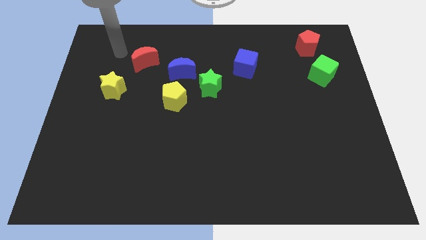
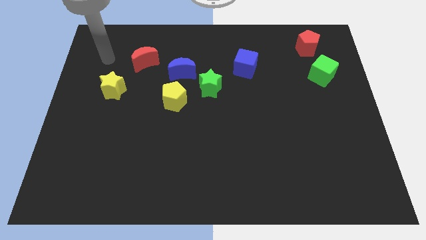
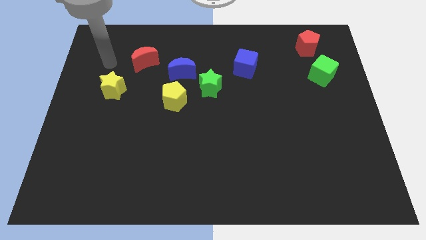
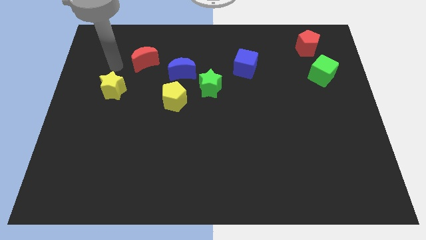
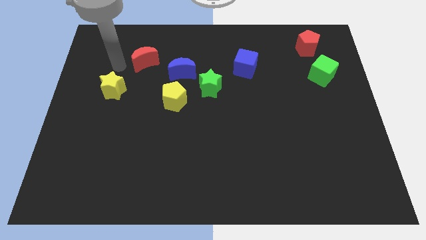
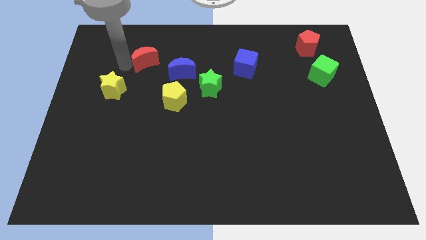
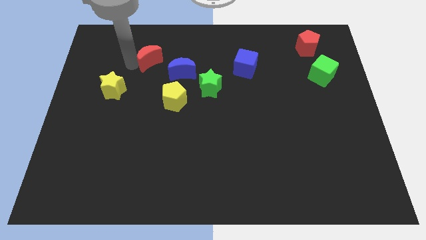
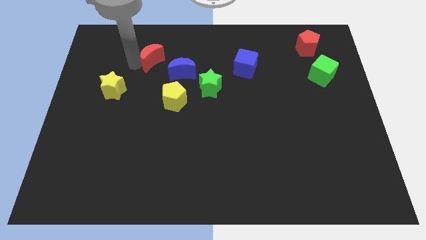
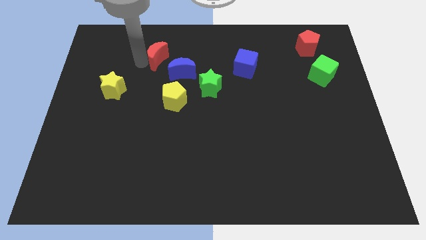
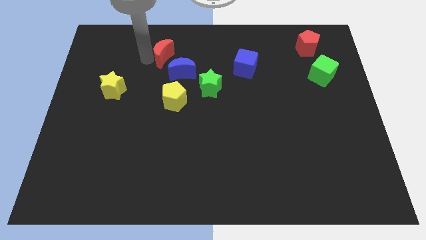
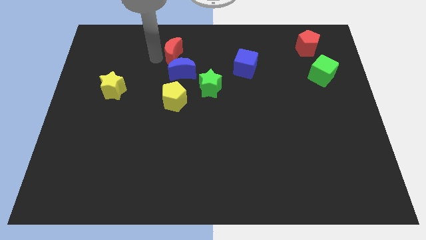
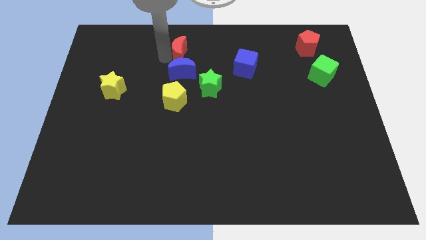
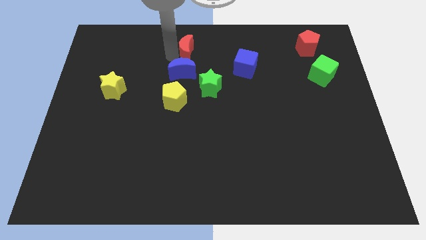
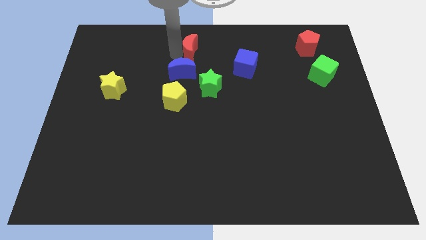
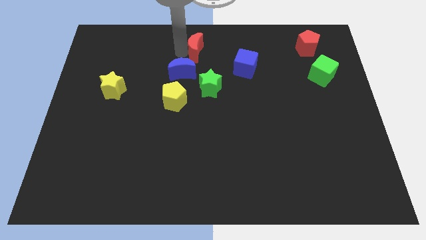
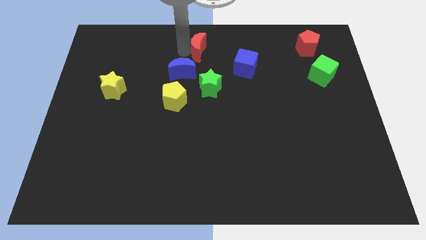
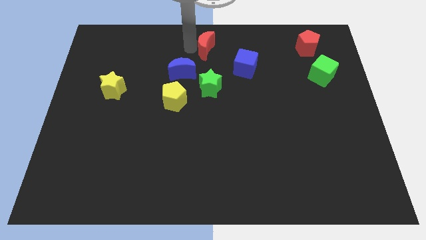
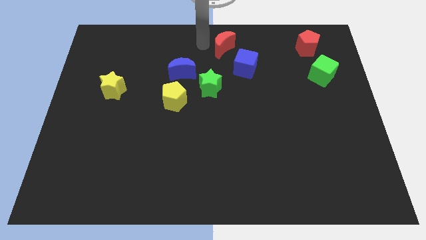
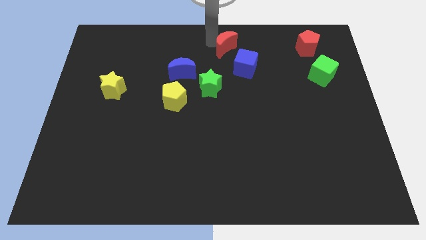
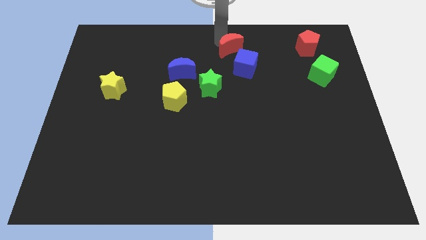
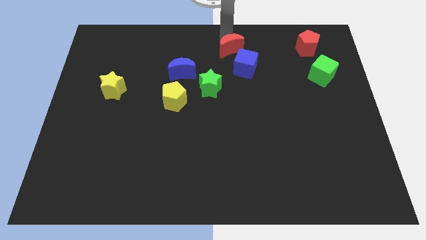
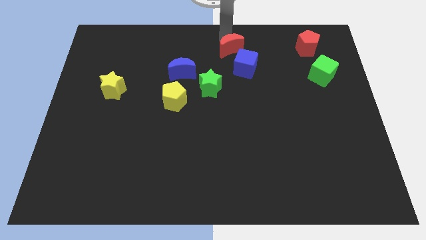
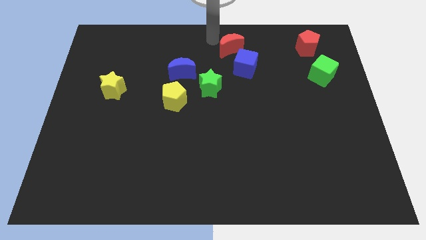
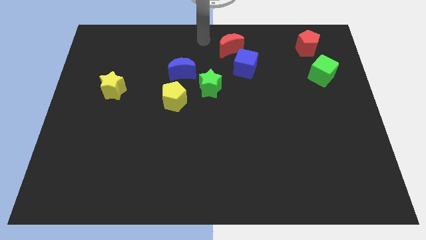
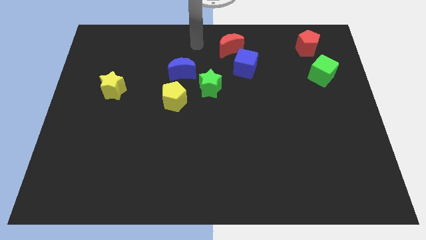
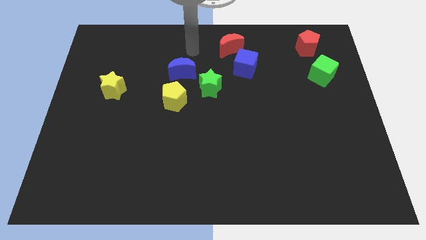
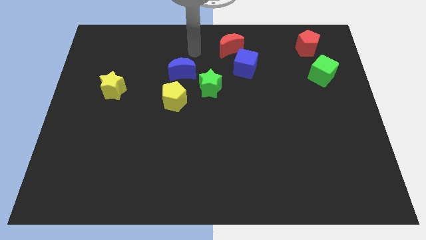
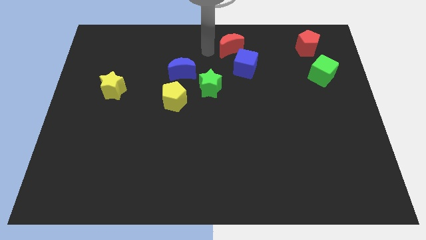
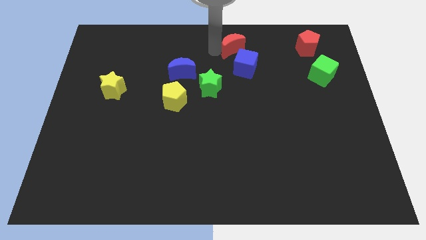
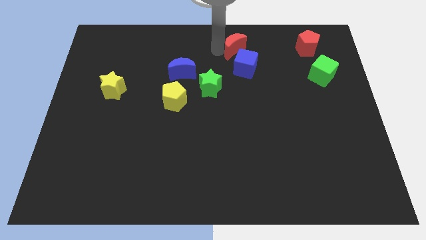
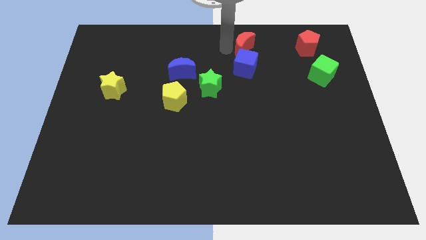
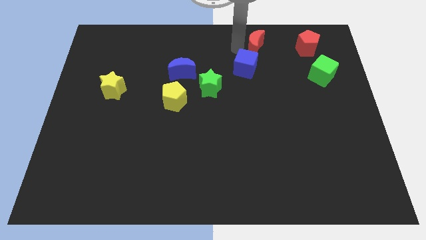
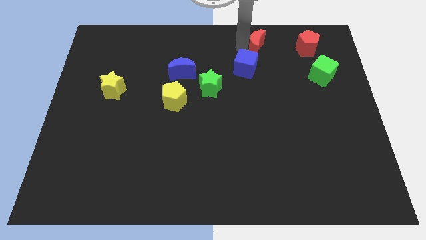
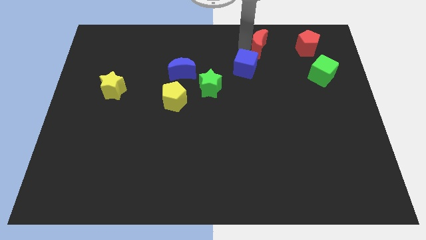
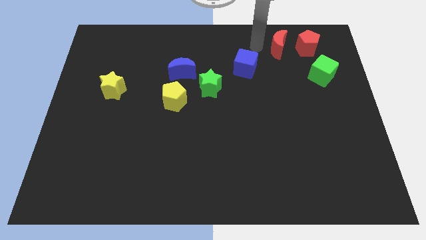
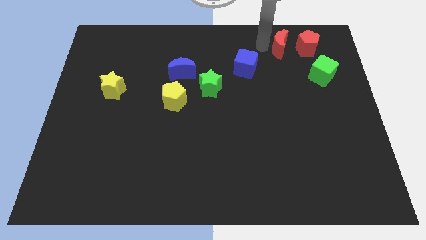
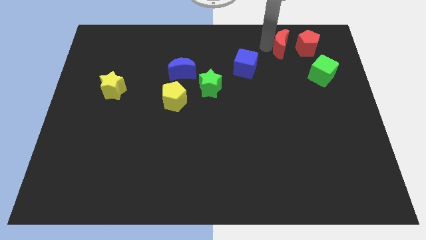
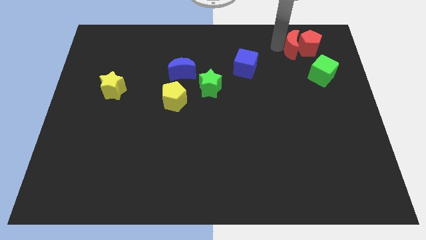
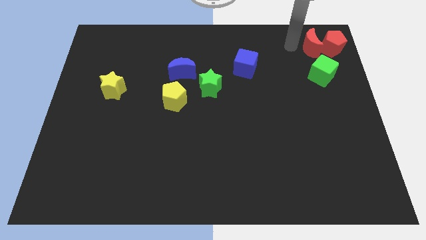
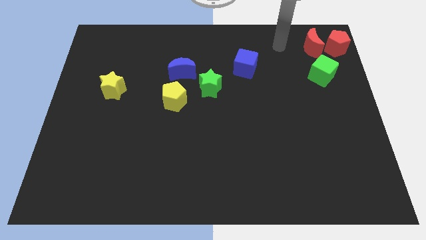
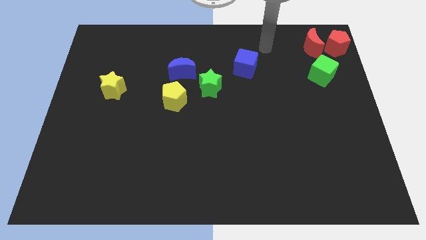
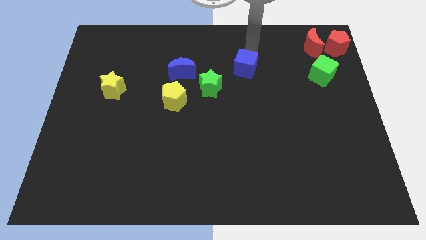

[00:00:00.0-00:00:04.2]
move the red moon into red pentagon to the right side

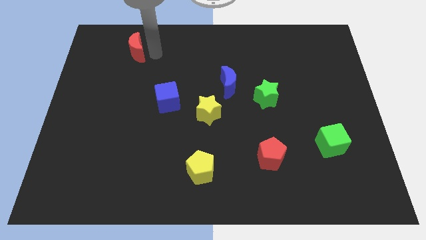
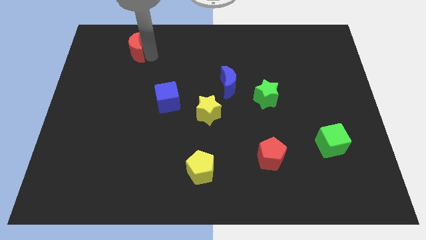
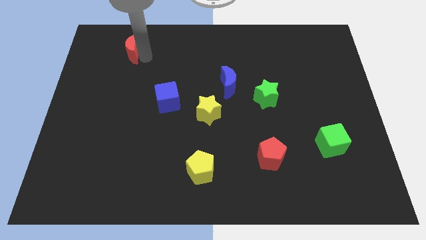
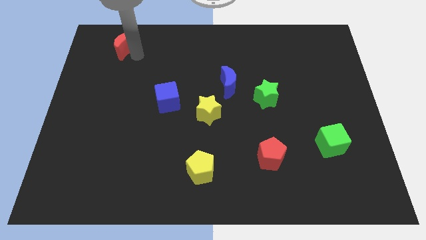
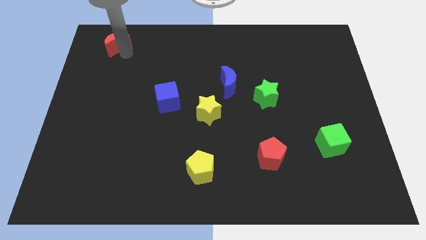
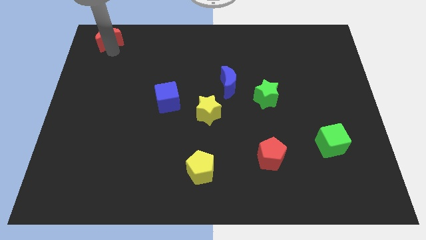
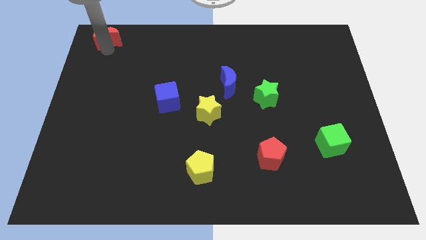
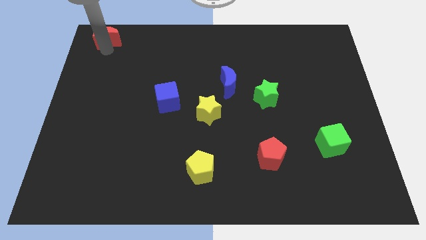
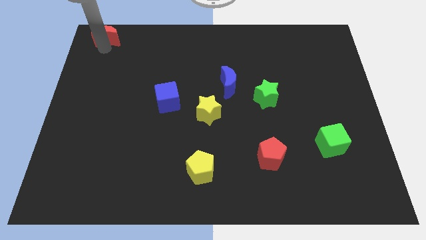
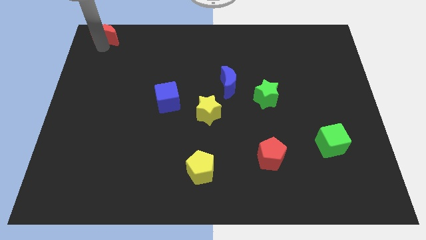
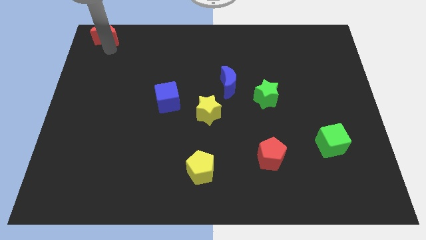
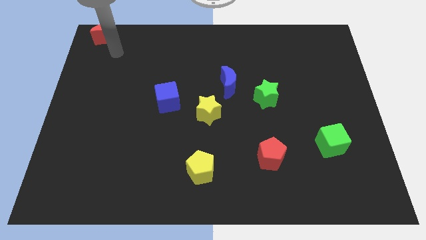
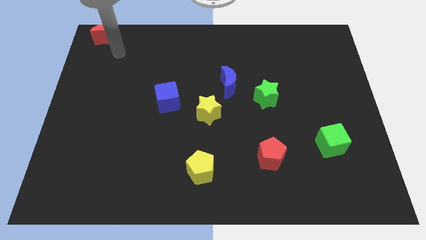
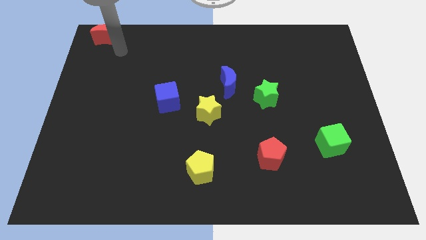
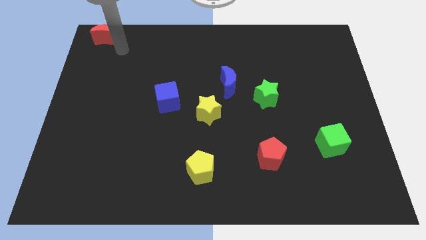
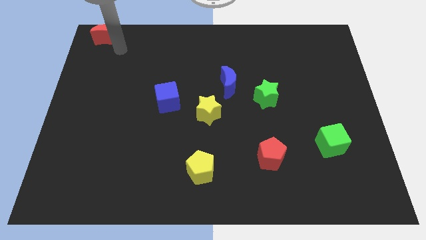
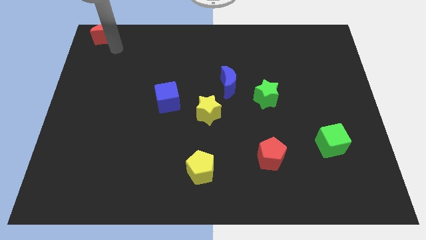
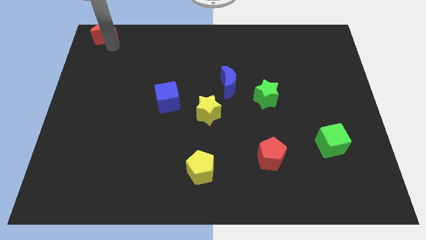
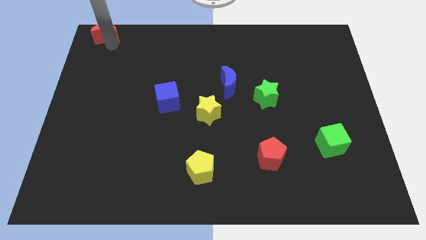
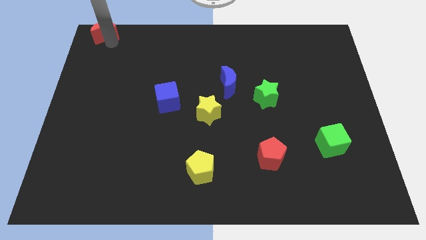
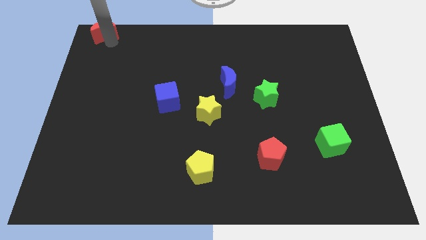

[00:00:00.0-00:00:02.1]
place the red moon at top left corner of the board

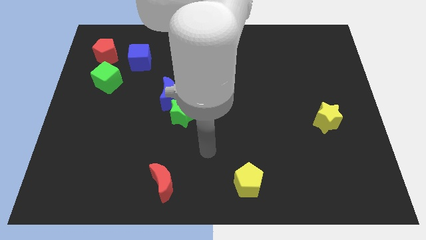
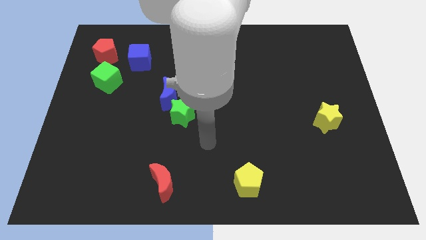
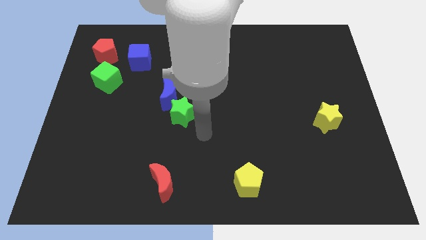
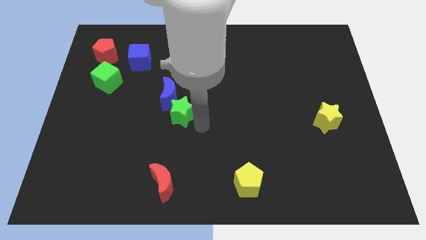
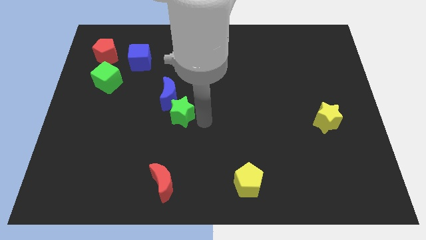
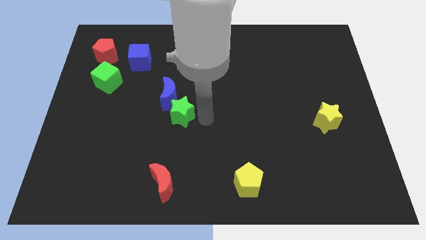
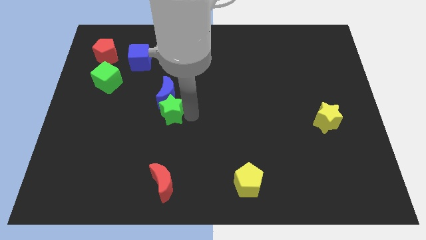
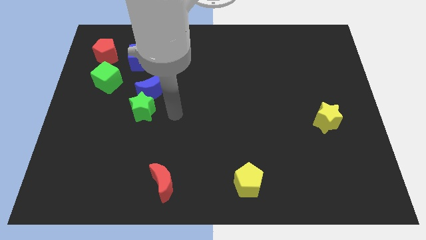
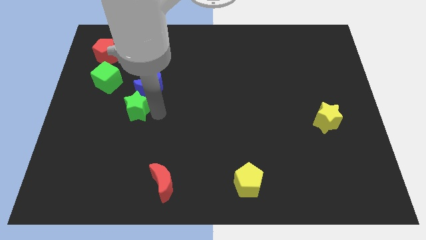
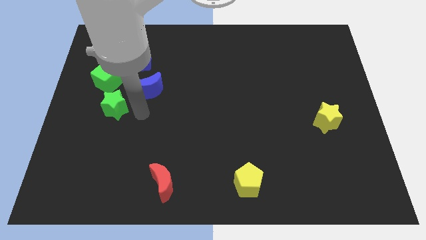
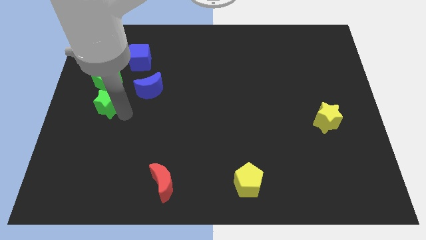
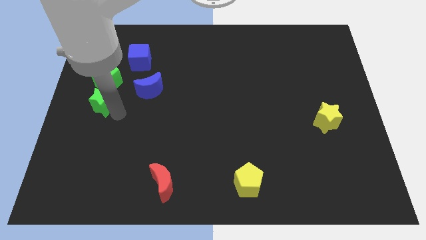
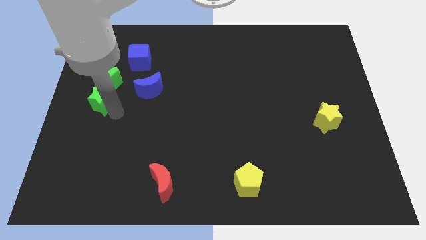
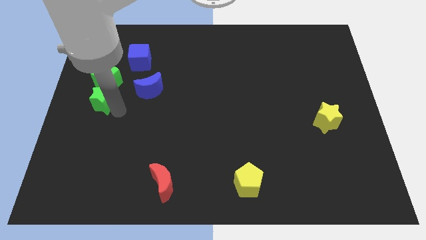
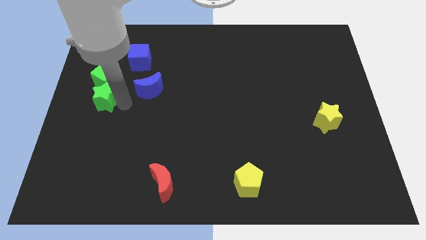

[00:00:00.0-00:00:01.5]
push the green star to the bottom of the green cube

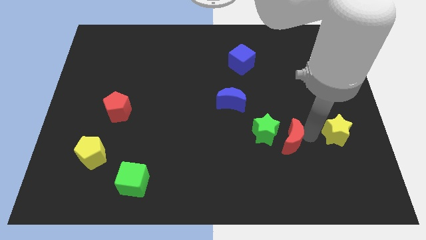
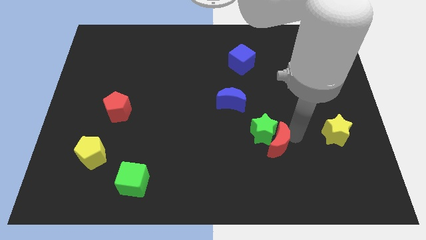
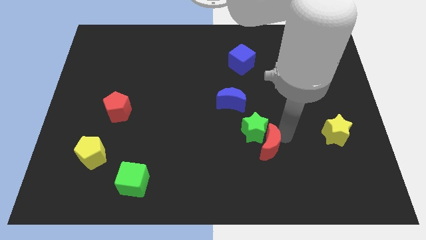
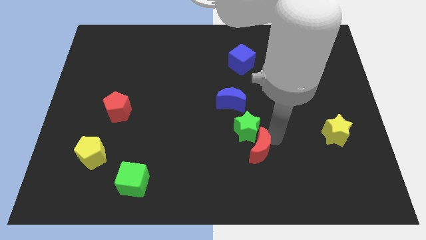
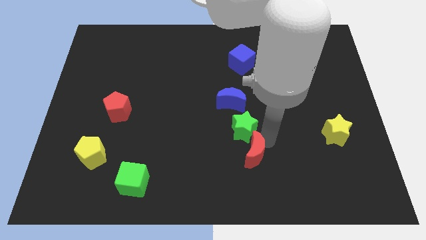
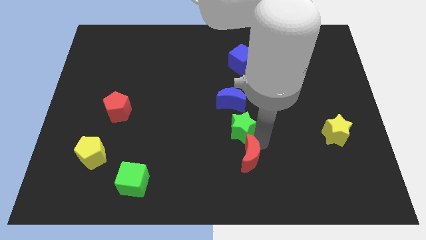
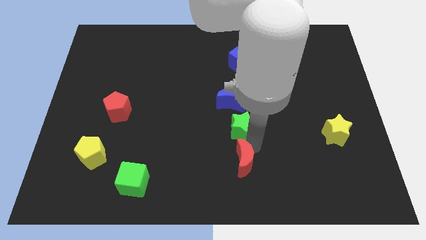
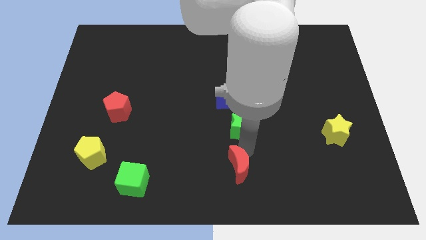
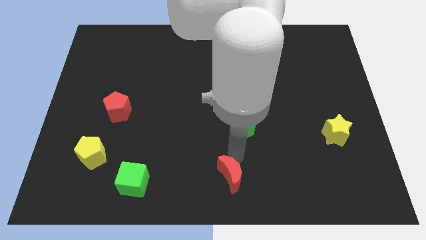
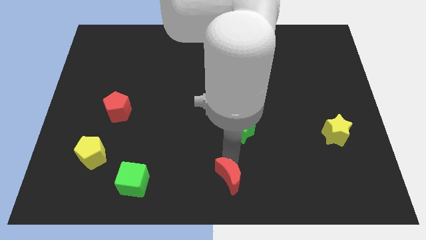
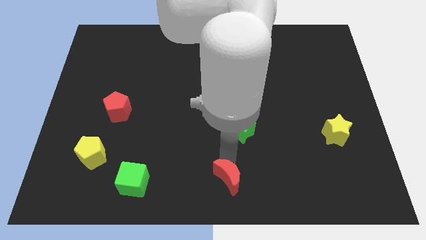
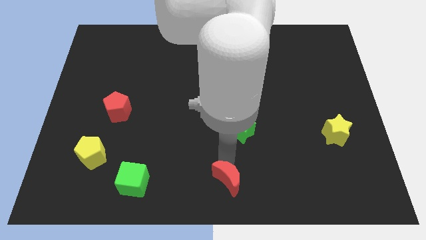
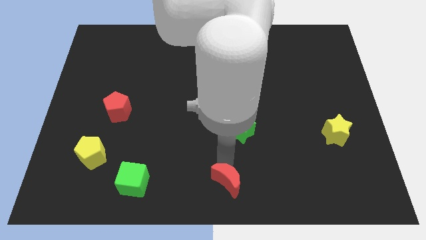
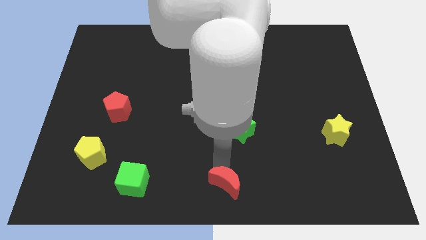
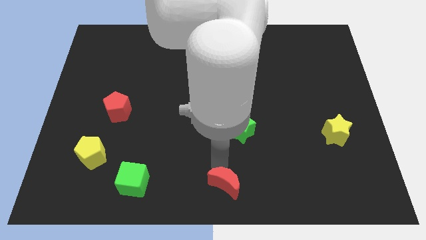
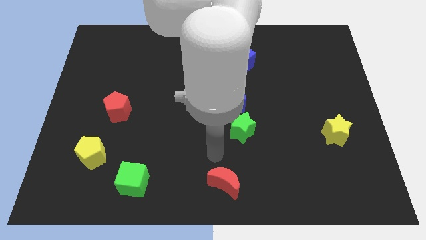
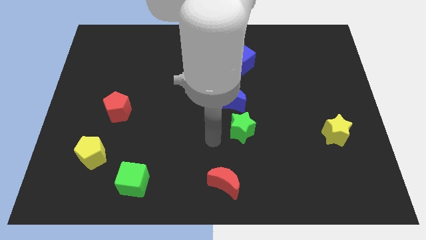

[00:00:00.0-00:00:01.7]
move the red moon to the bottom center of the board
